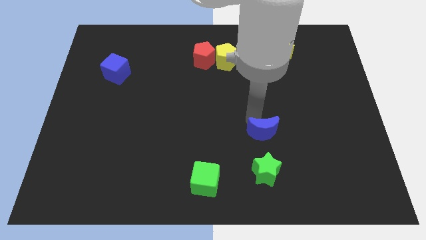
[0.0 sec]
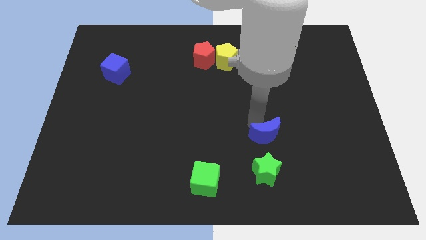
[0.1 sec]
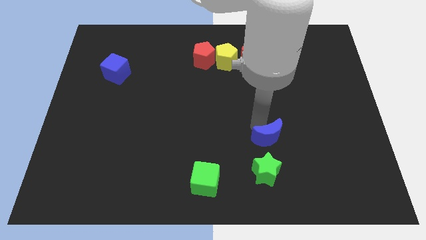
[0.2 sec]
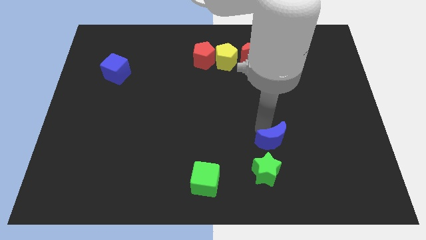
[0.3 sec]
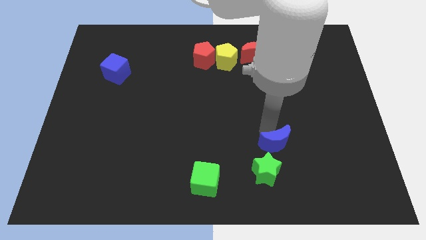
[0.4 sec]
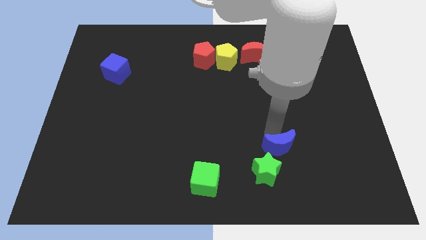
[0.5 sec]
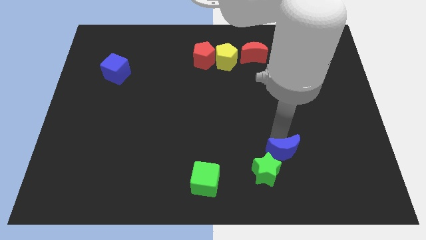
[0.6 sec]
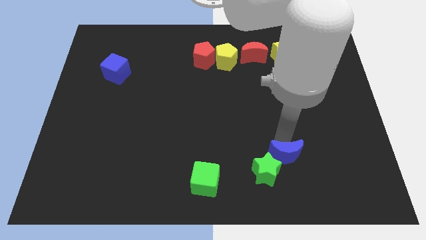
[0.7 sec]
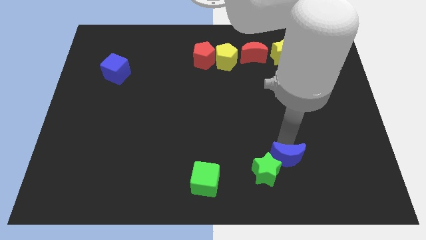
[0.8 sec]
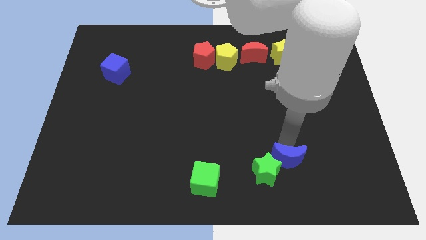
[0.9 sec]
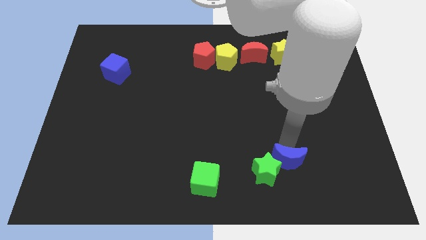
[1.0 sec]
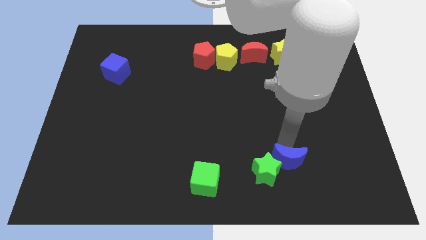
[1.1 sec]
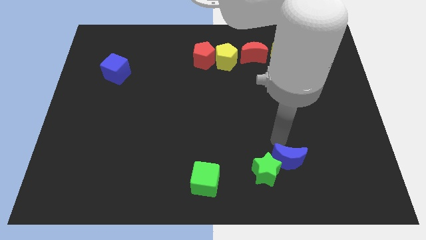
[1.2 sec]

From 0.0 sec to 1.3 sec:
move the blue crescent to the top right side of the green star

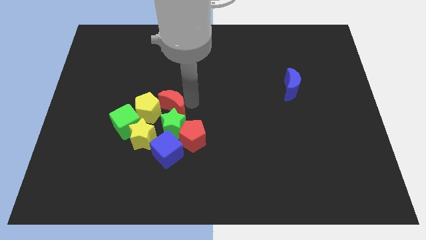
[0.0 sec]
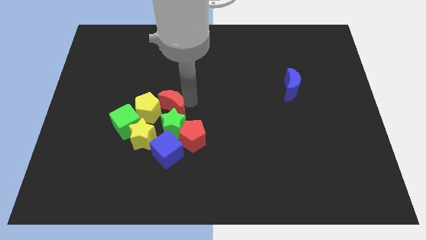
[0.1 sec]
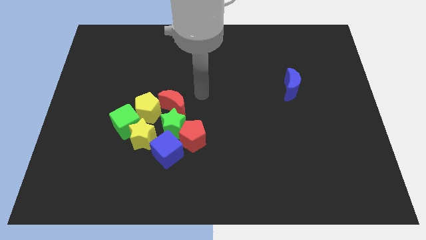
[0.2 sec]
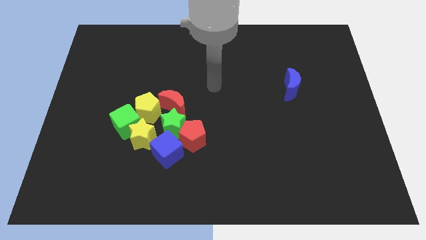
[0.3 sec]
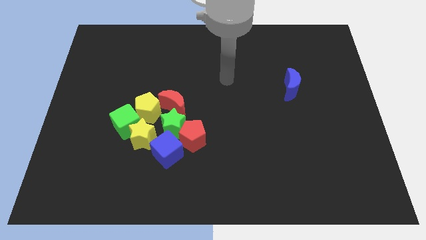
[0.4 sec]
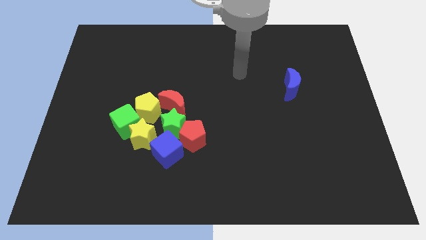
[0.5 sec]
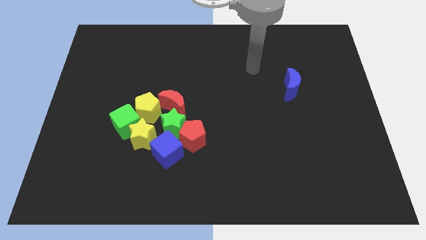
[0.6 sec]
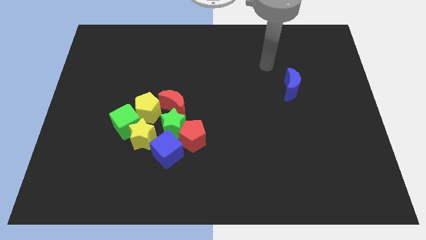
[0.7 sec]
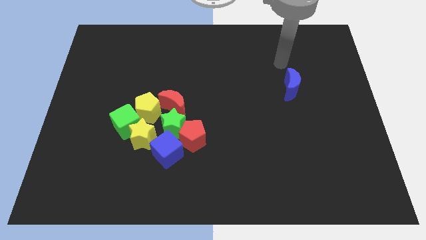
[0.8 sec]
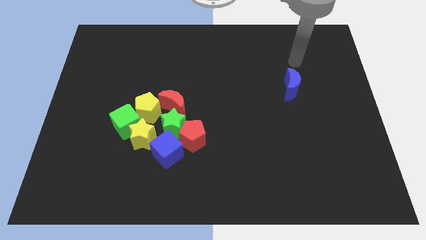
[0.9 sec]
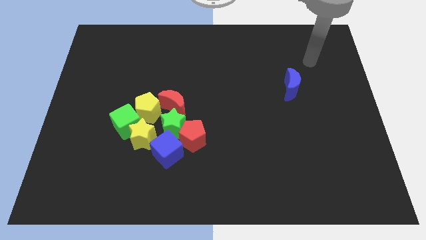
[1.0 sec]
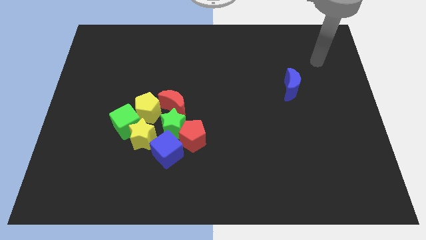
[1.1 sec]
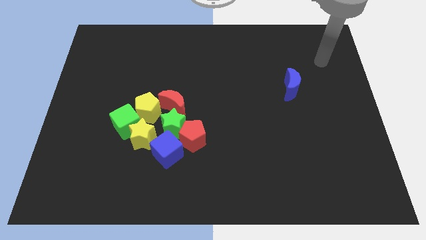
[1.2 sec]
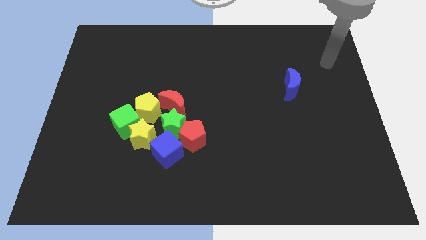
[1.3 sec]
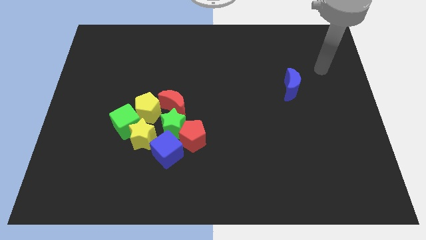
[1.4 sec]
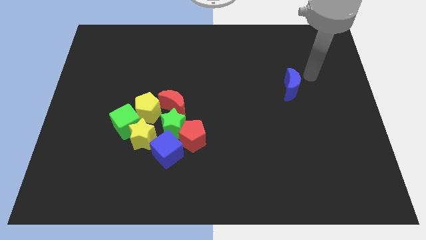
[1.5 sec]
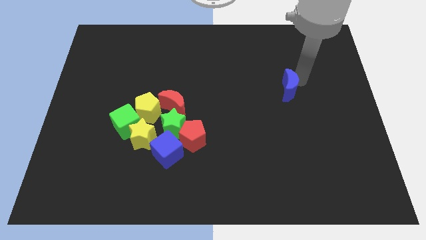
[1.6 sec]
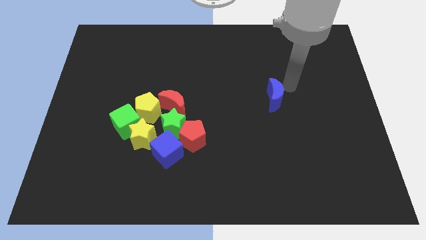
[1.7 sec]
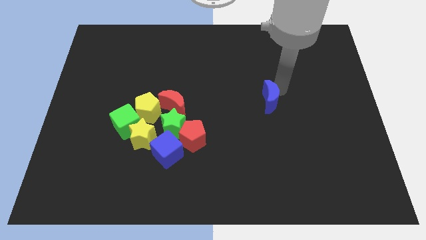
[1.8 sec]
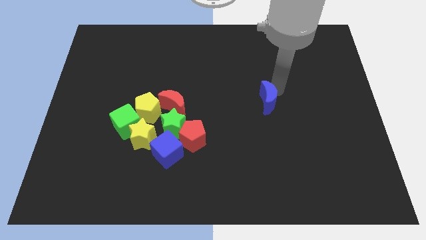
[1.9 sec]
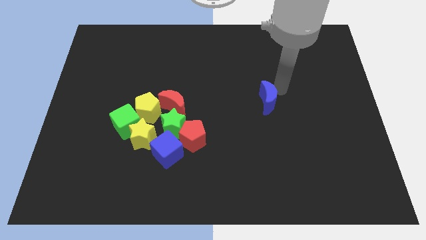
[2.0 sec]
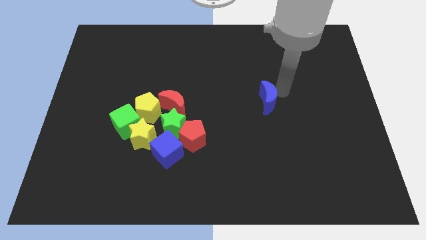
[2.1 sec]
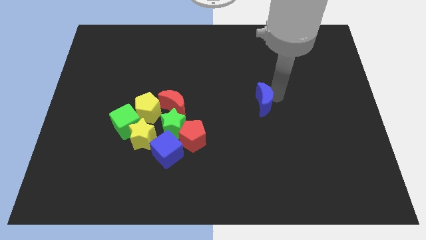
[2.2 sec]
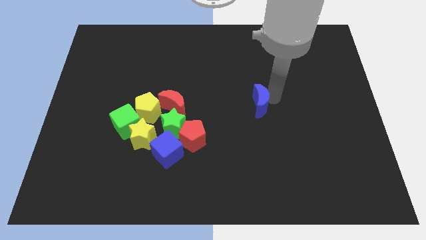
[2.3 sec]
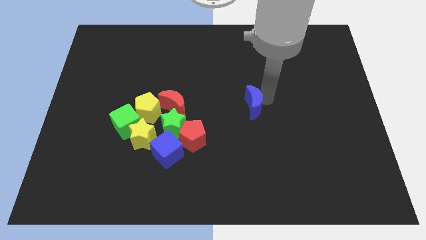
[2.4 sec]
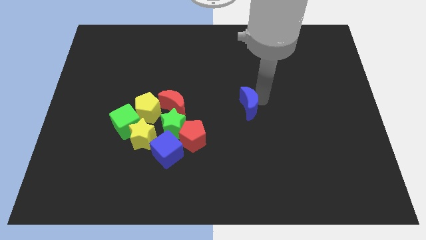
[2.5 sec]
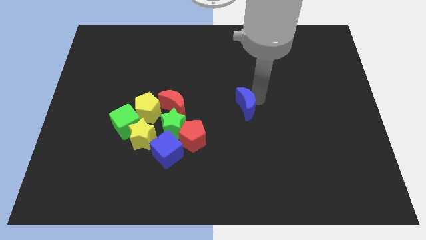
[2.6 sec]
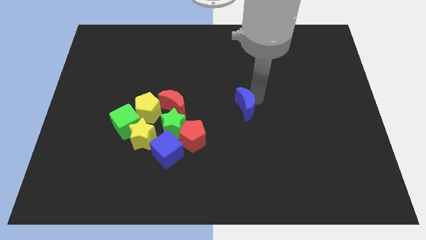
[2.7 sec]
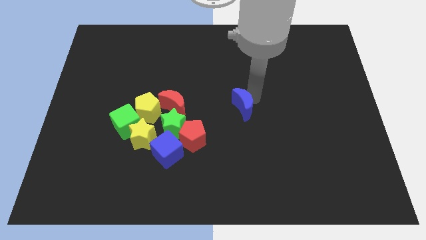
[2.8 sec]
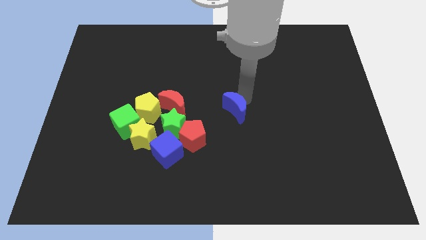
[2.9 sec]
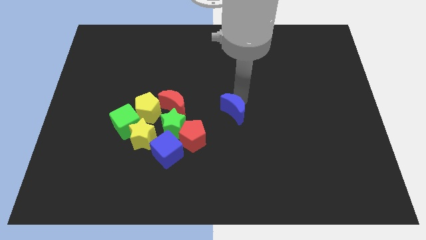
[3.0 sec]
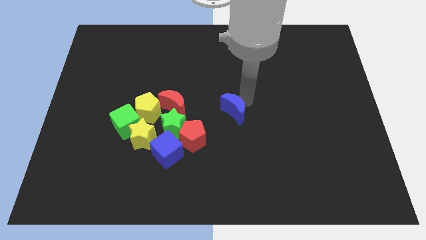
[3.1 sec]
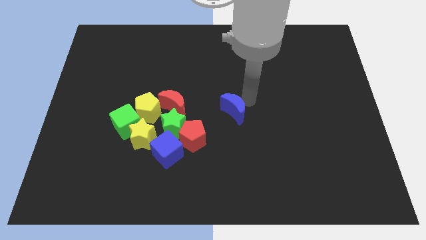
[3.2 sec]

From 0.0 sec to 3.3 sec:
slide the blue moon towards the group of blocks

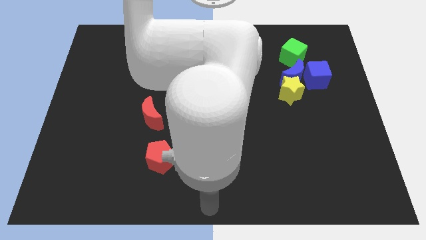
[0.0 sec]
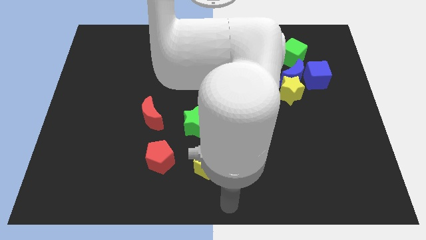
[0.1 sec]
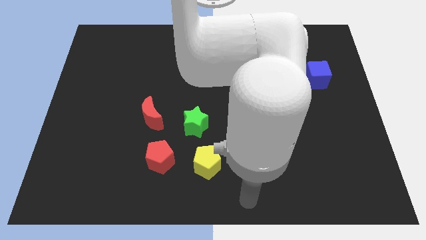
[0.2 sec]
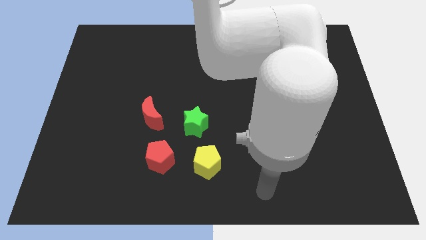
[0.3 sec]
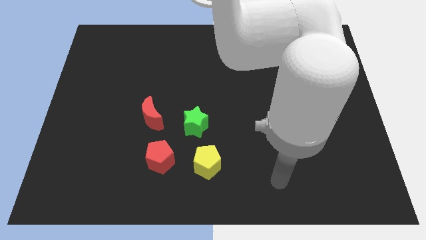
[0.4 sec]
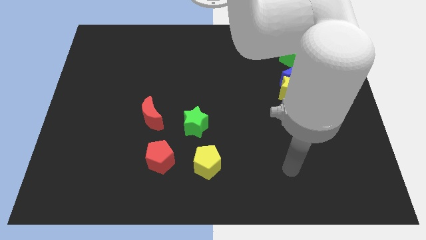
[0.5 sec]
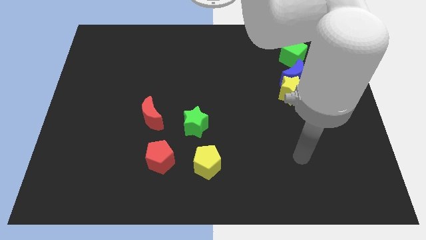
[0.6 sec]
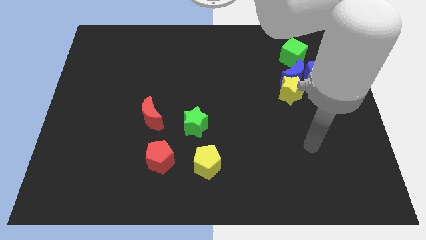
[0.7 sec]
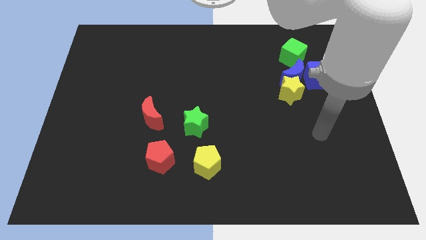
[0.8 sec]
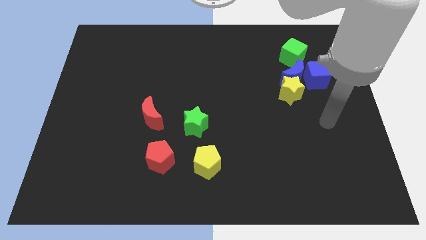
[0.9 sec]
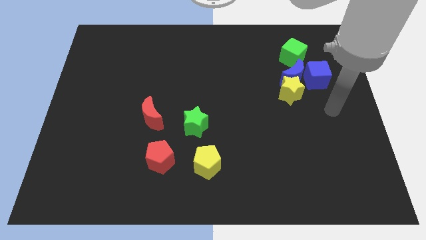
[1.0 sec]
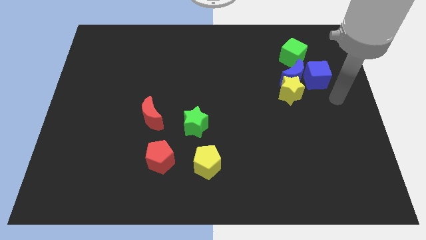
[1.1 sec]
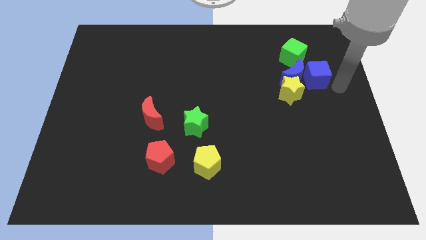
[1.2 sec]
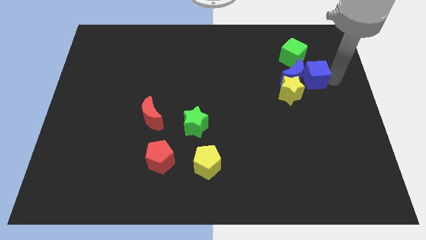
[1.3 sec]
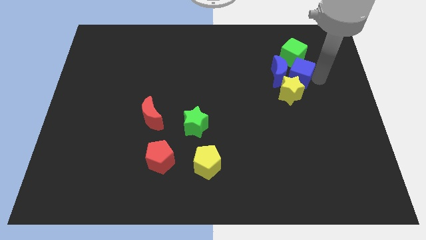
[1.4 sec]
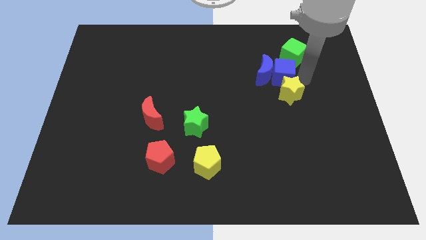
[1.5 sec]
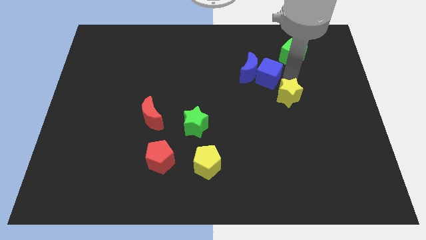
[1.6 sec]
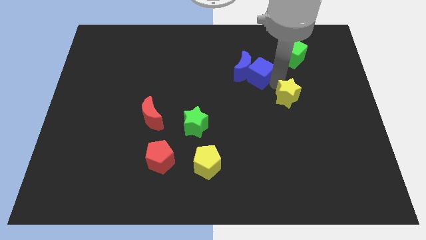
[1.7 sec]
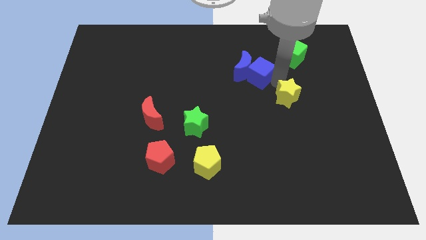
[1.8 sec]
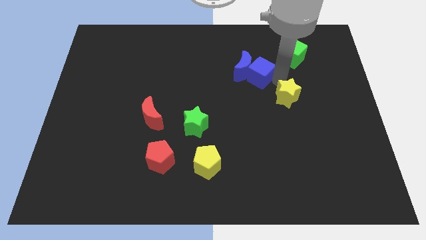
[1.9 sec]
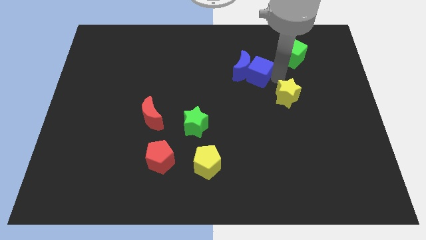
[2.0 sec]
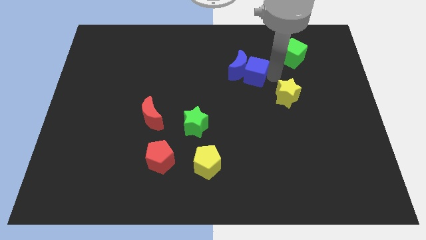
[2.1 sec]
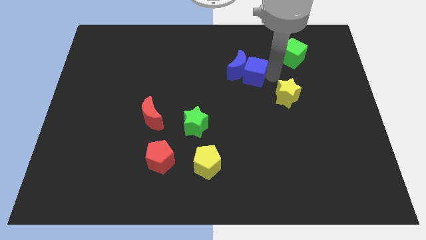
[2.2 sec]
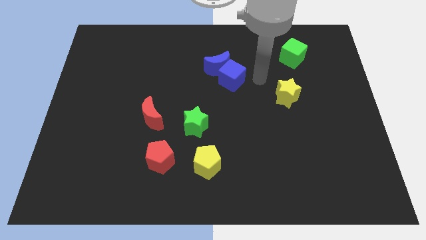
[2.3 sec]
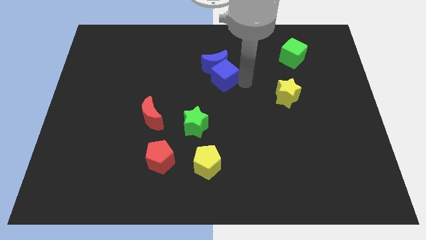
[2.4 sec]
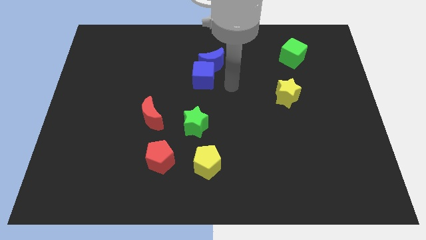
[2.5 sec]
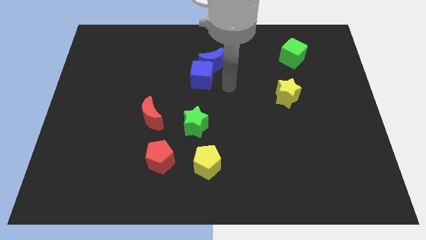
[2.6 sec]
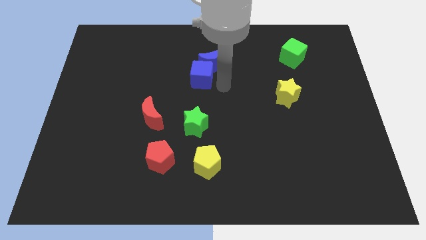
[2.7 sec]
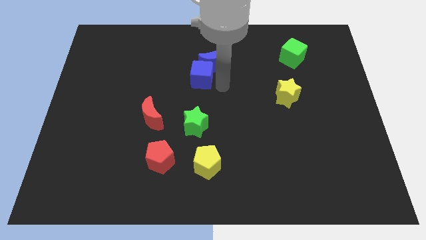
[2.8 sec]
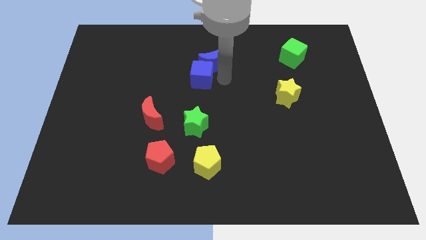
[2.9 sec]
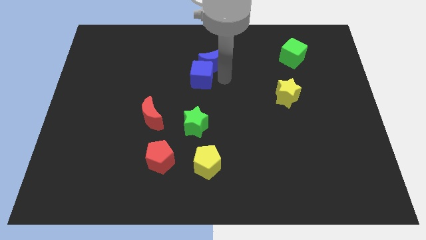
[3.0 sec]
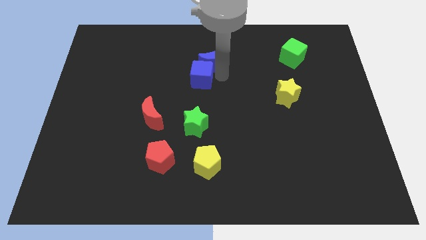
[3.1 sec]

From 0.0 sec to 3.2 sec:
push the blue cube slightly to the left

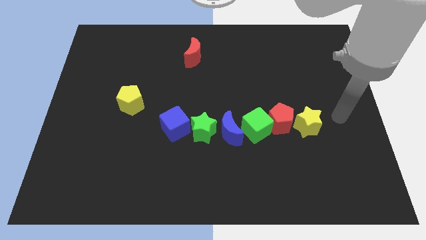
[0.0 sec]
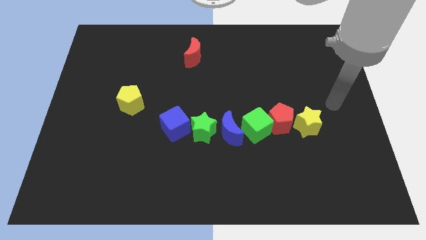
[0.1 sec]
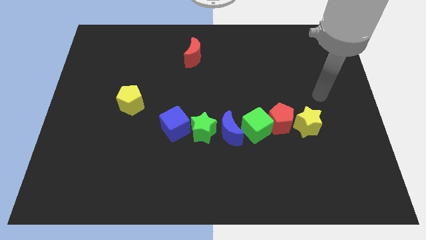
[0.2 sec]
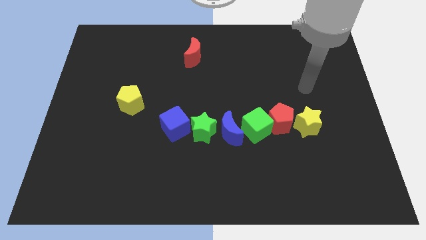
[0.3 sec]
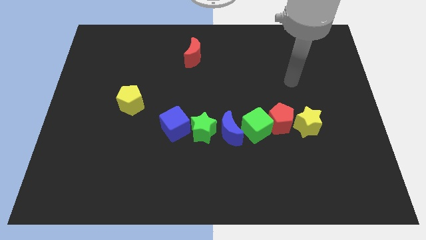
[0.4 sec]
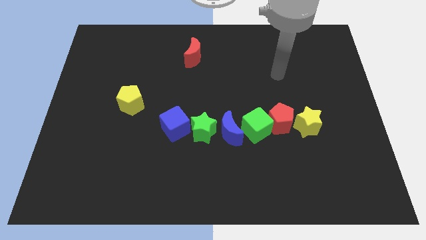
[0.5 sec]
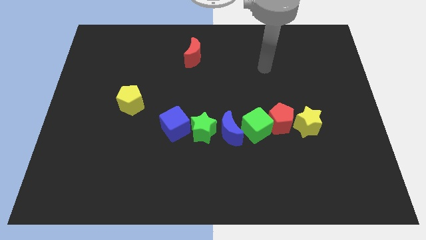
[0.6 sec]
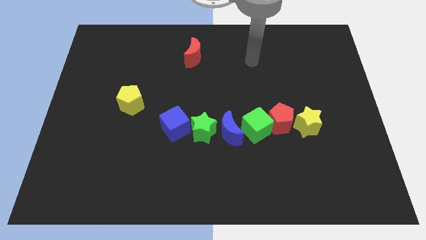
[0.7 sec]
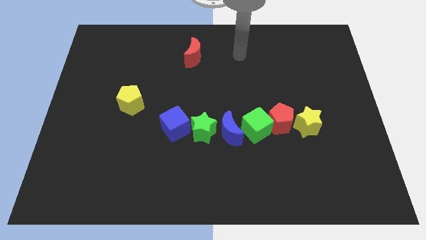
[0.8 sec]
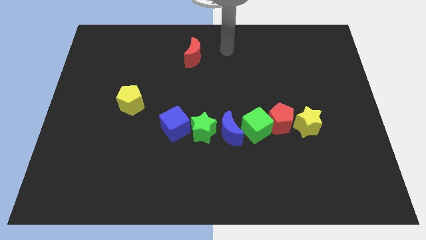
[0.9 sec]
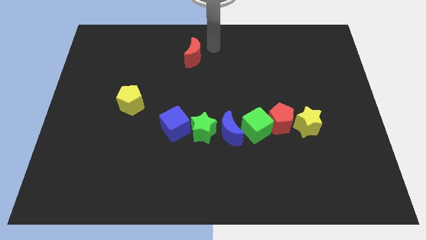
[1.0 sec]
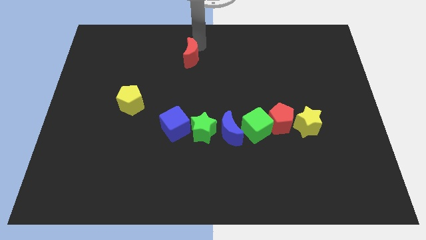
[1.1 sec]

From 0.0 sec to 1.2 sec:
move the arm to the top center of the red crescent
